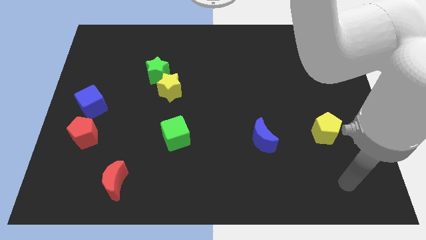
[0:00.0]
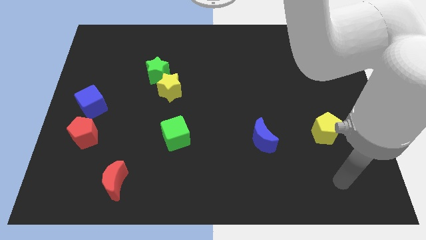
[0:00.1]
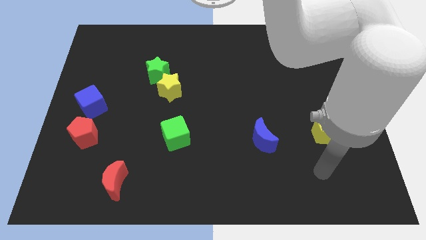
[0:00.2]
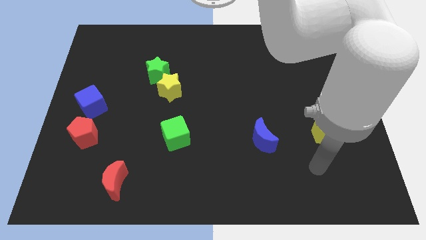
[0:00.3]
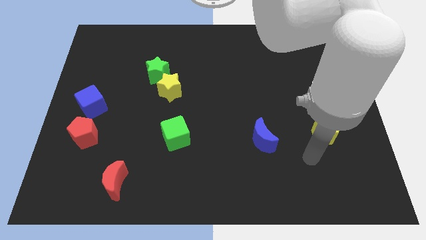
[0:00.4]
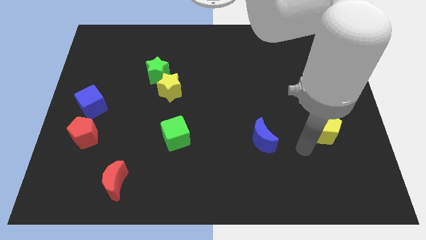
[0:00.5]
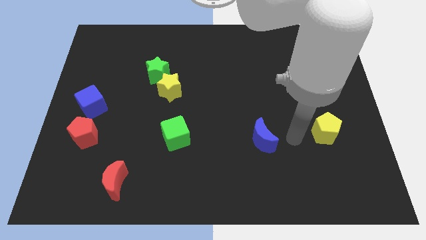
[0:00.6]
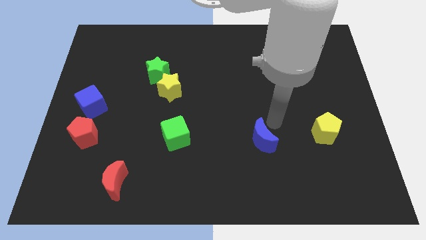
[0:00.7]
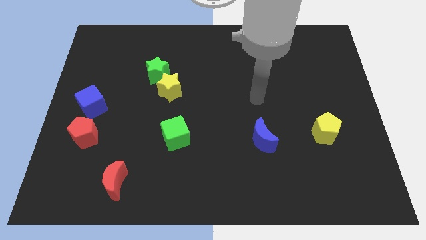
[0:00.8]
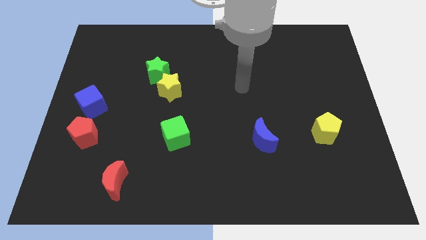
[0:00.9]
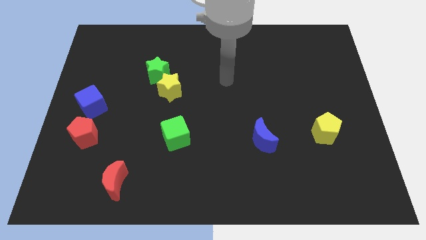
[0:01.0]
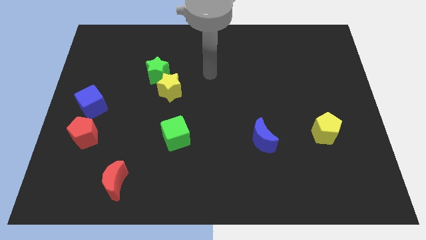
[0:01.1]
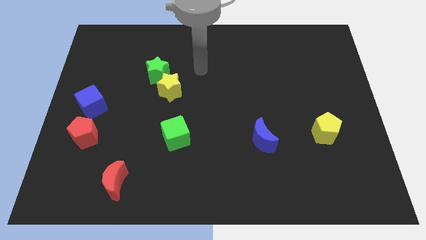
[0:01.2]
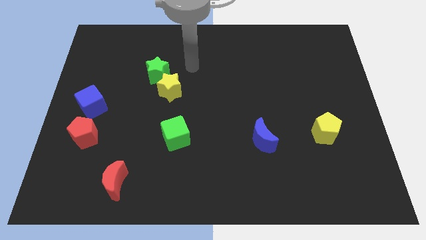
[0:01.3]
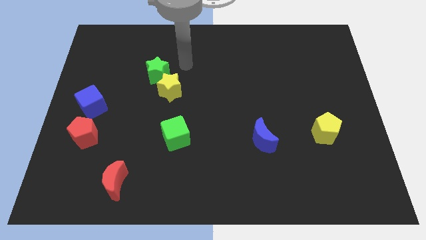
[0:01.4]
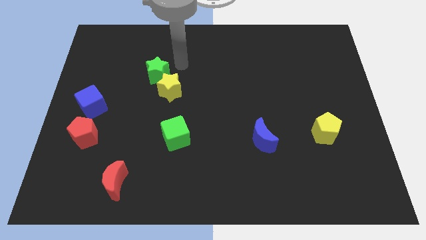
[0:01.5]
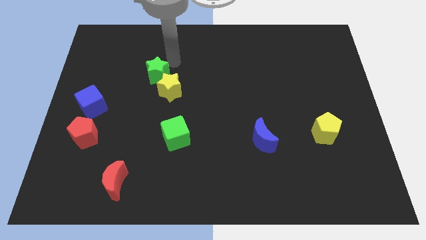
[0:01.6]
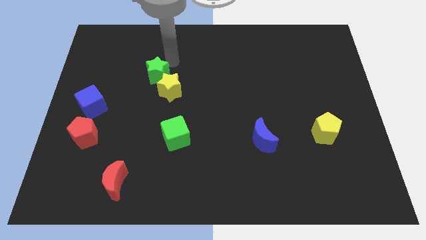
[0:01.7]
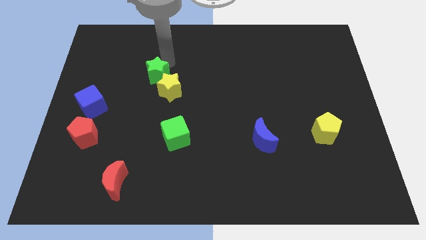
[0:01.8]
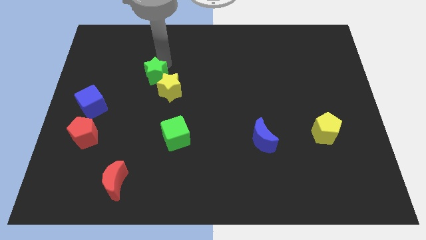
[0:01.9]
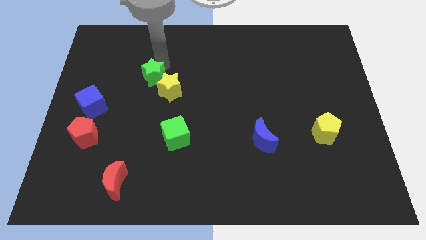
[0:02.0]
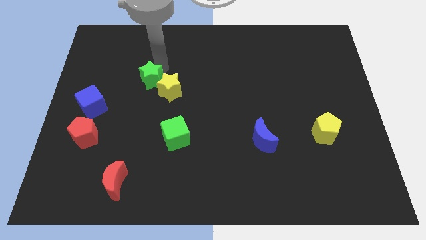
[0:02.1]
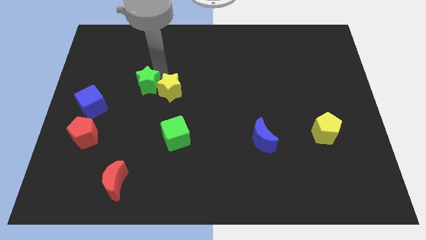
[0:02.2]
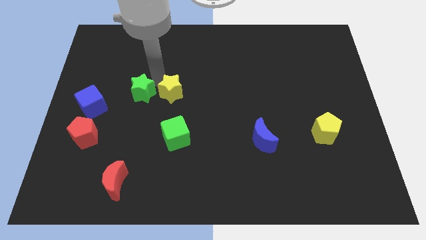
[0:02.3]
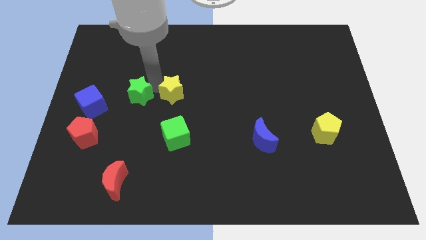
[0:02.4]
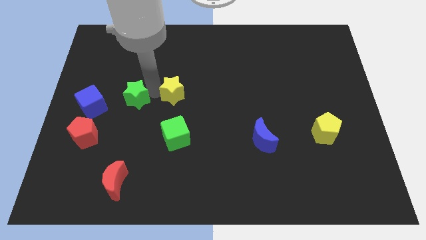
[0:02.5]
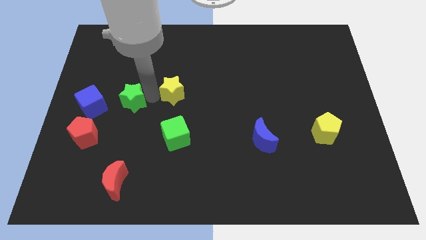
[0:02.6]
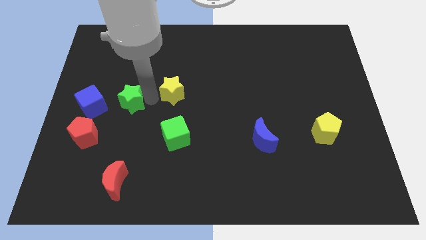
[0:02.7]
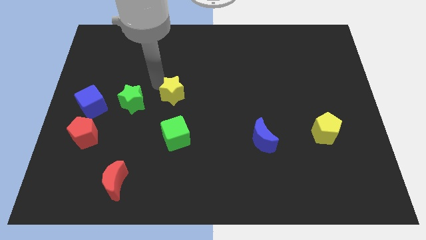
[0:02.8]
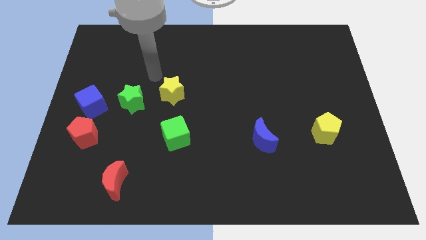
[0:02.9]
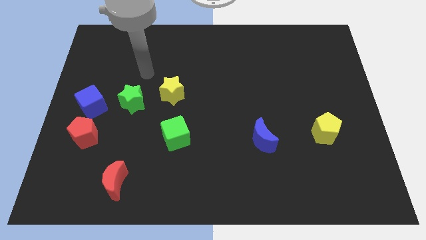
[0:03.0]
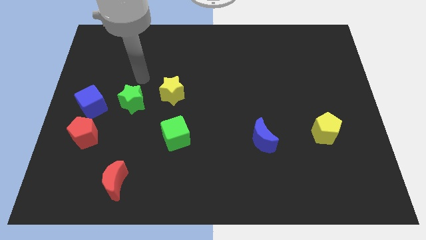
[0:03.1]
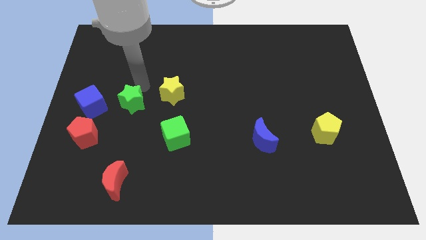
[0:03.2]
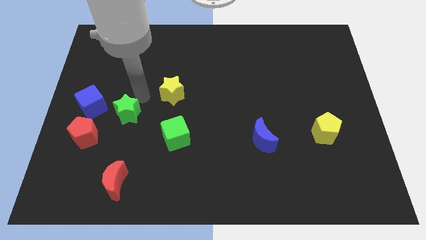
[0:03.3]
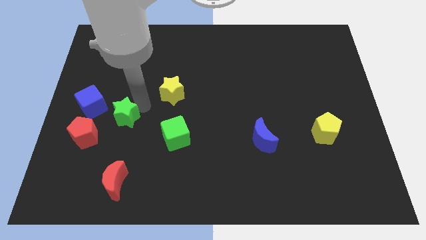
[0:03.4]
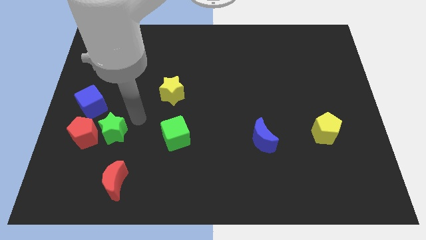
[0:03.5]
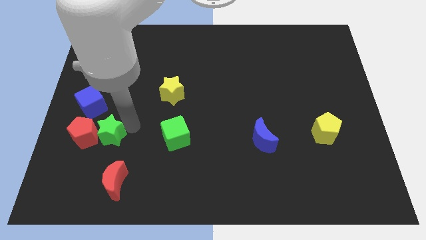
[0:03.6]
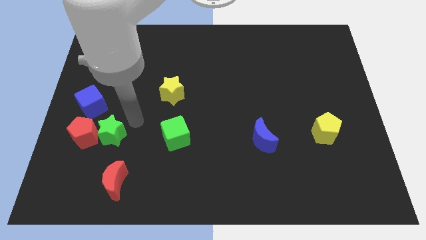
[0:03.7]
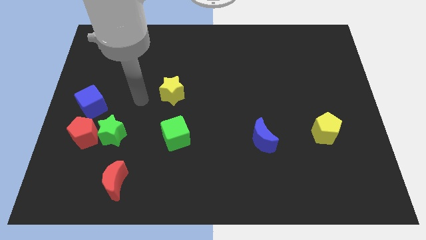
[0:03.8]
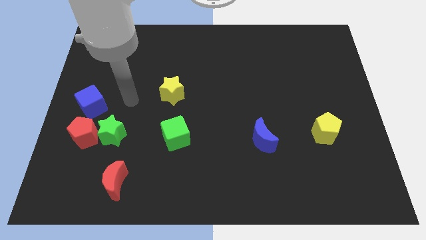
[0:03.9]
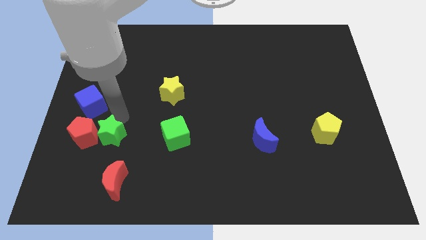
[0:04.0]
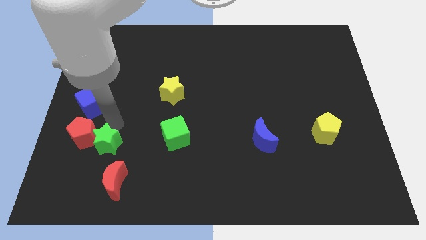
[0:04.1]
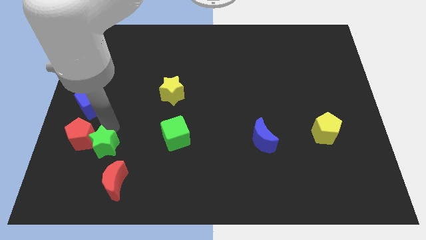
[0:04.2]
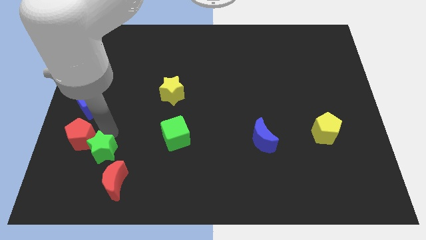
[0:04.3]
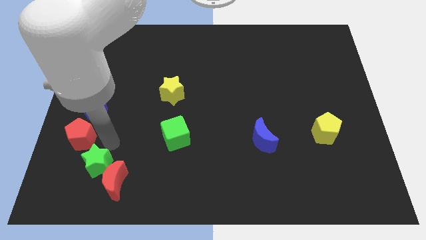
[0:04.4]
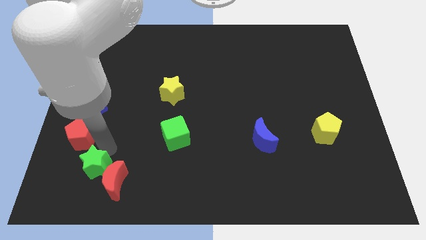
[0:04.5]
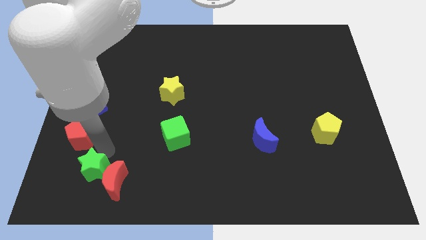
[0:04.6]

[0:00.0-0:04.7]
put the green star close to the red moon

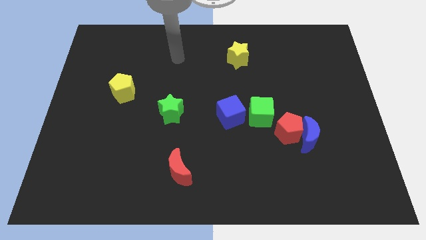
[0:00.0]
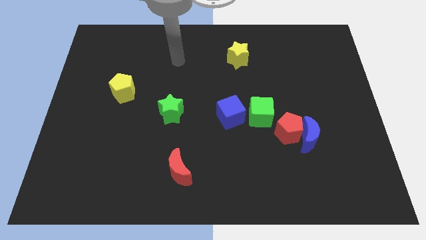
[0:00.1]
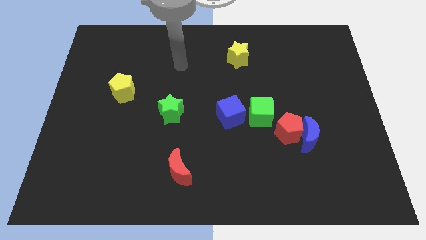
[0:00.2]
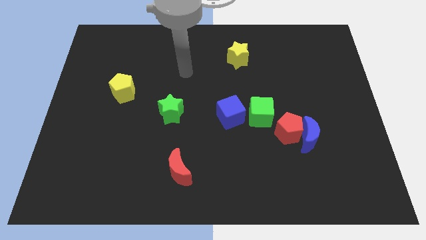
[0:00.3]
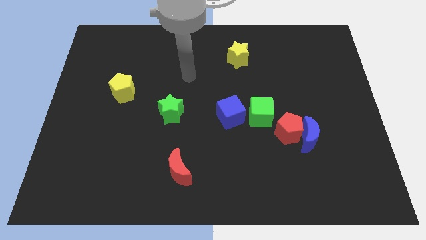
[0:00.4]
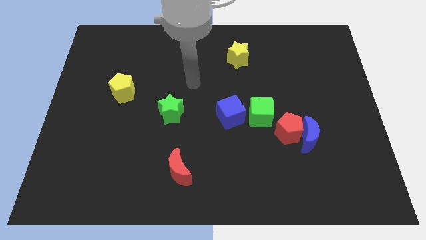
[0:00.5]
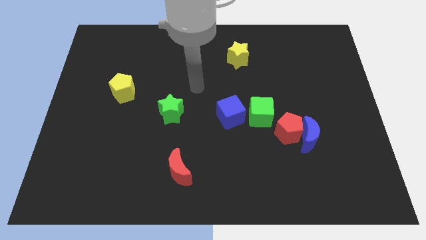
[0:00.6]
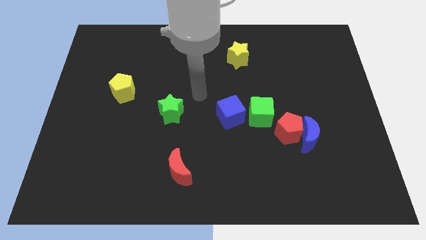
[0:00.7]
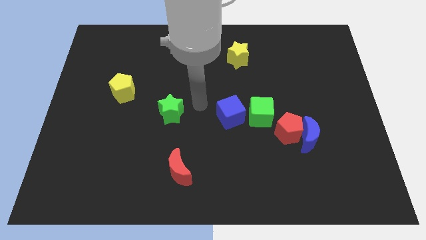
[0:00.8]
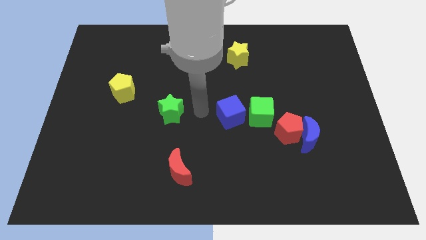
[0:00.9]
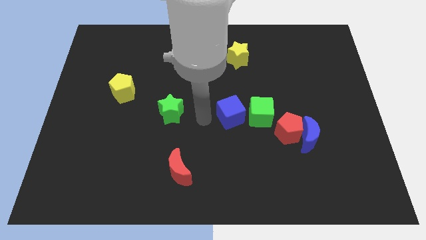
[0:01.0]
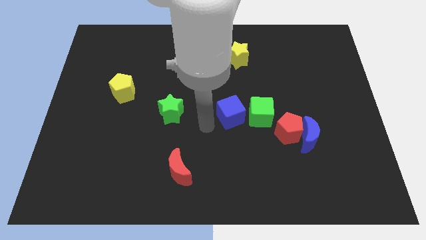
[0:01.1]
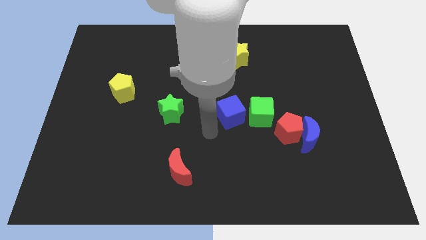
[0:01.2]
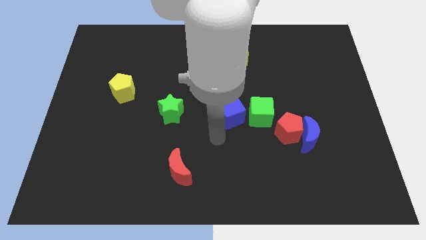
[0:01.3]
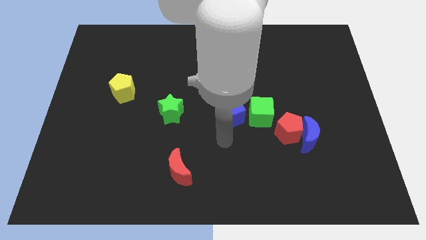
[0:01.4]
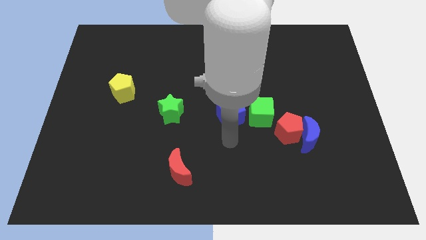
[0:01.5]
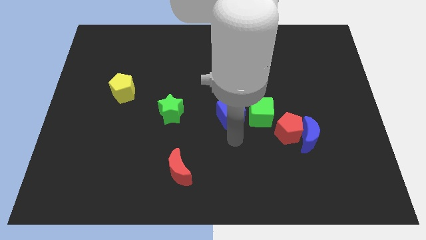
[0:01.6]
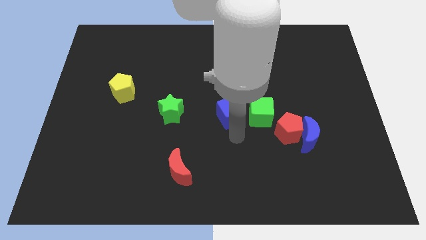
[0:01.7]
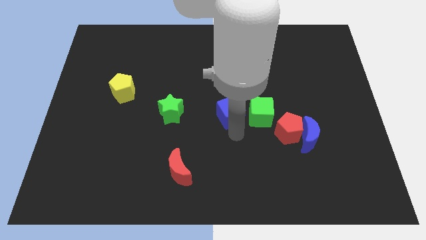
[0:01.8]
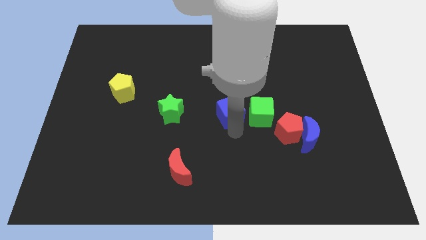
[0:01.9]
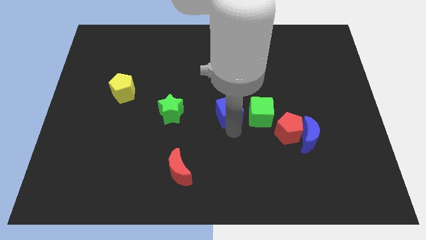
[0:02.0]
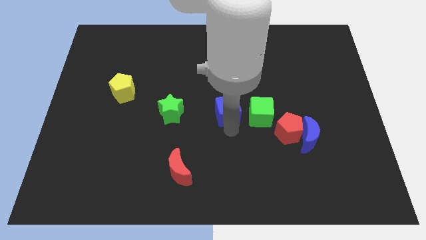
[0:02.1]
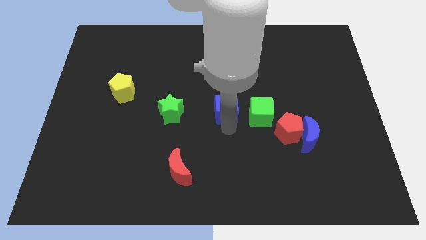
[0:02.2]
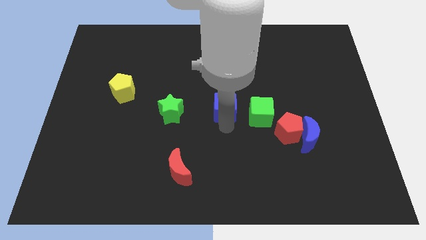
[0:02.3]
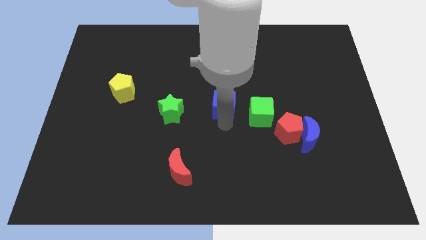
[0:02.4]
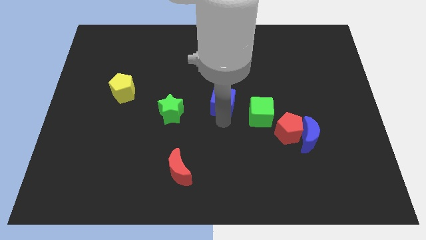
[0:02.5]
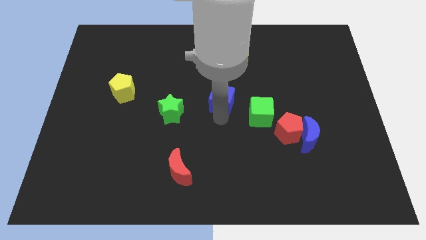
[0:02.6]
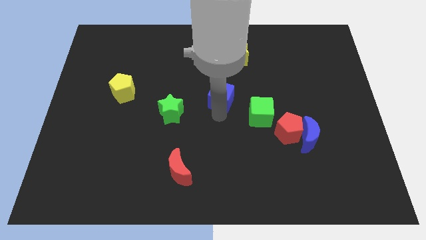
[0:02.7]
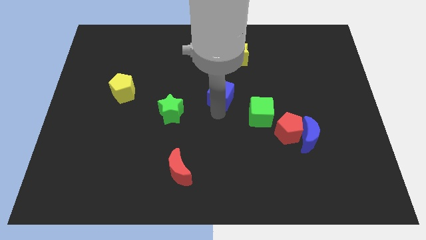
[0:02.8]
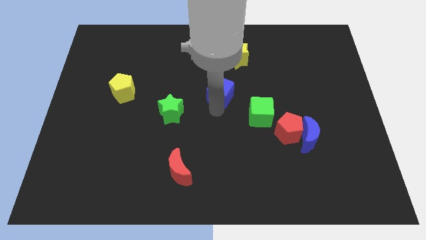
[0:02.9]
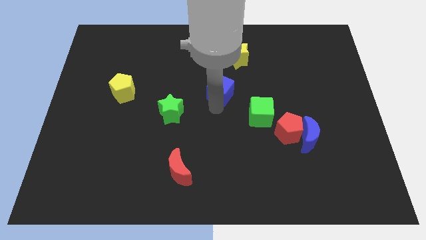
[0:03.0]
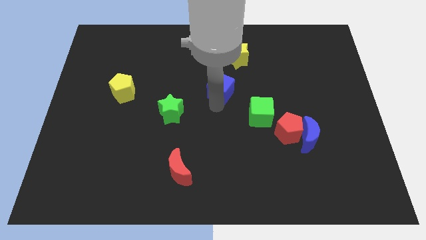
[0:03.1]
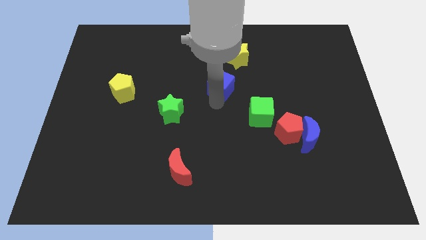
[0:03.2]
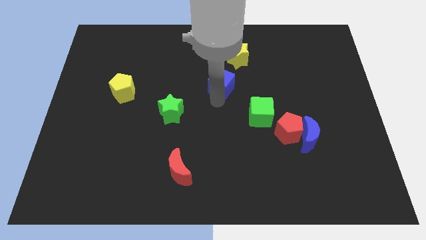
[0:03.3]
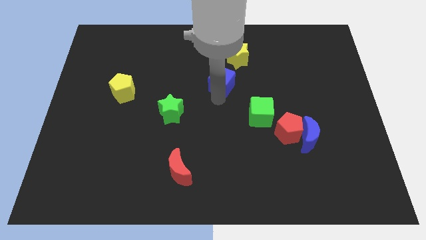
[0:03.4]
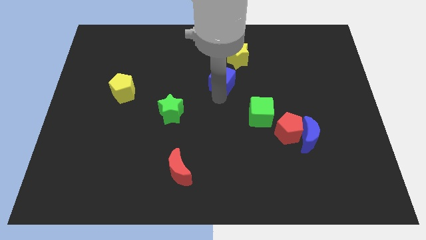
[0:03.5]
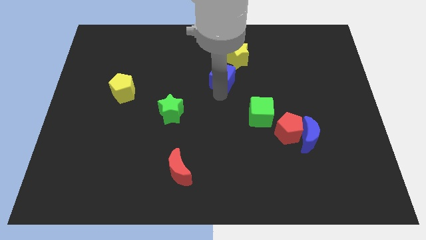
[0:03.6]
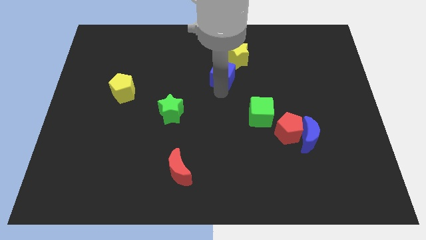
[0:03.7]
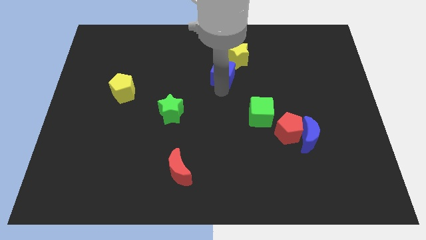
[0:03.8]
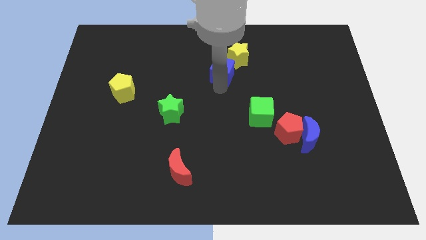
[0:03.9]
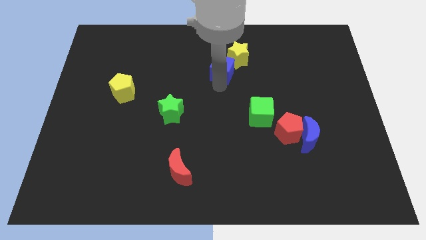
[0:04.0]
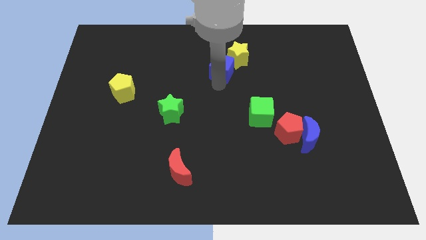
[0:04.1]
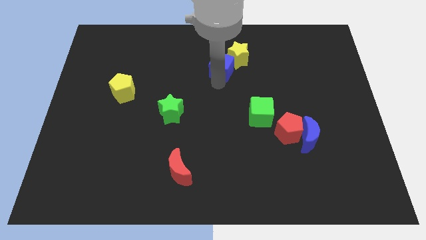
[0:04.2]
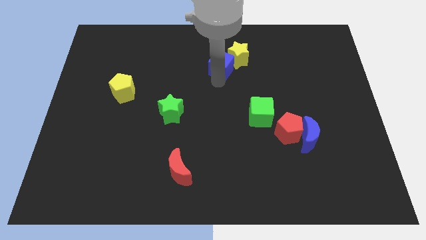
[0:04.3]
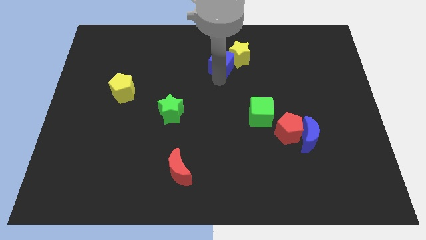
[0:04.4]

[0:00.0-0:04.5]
move the blue cube close to the yellow star
